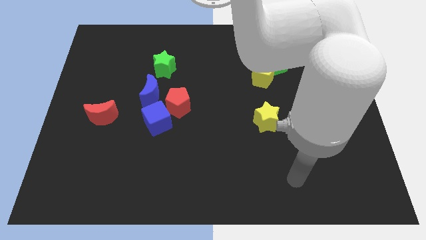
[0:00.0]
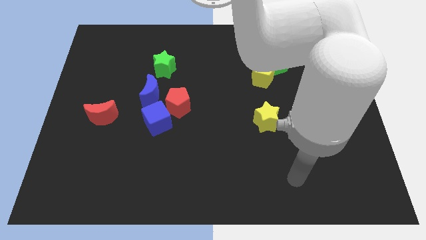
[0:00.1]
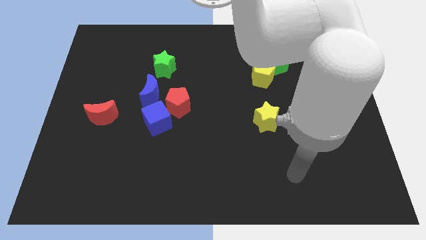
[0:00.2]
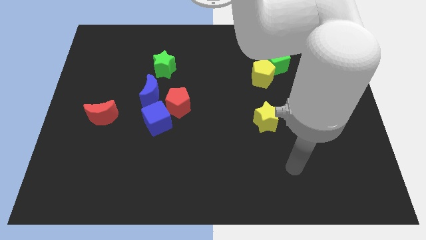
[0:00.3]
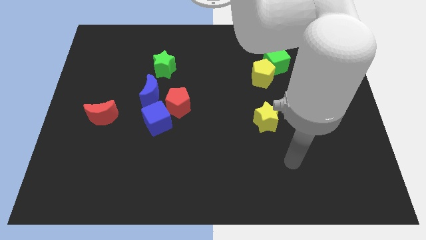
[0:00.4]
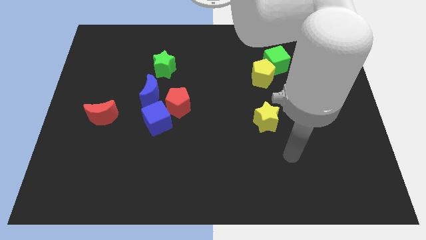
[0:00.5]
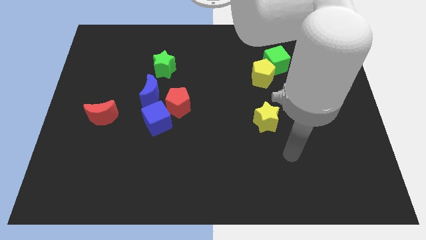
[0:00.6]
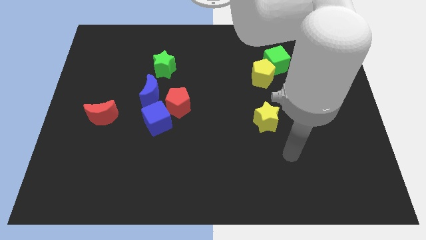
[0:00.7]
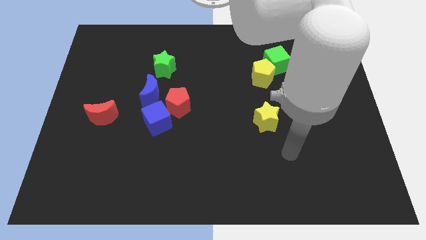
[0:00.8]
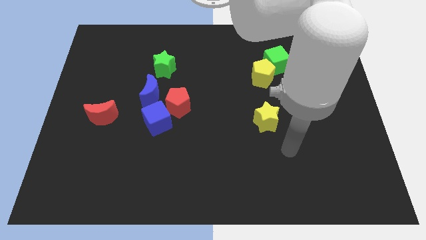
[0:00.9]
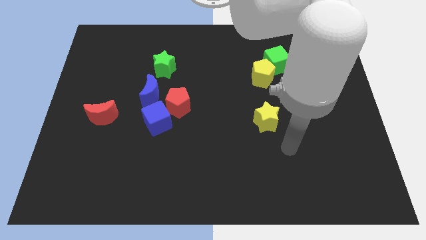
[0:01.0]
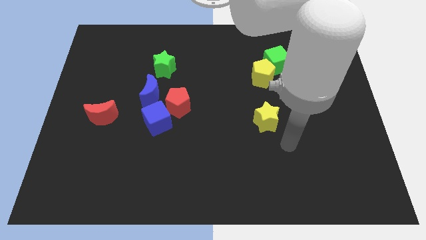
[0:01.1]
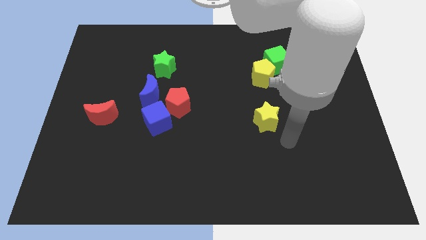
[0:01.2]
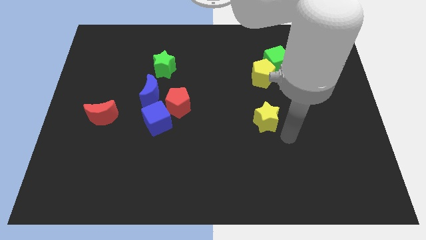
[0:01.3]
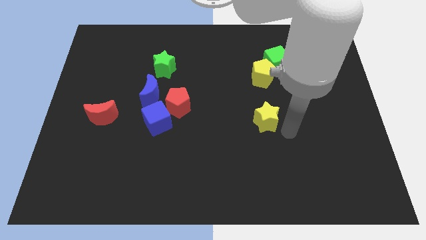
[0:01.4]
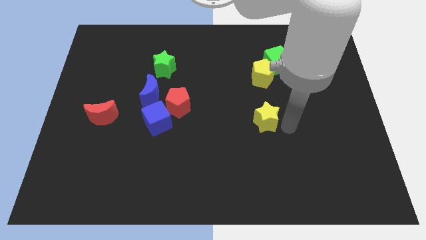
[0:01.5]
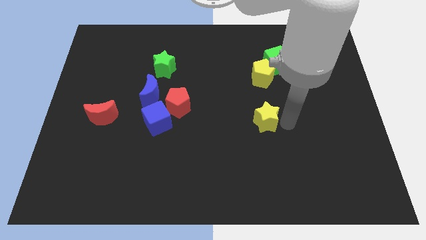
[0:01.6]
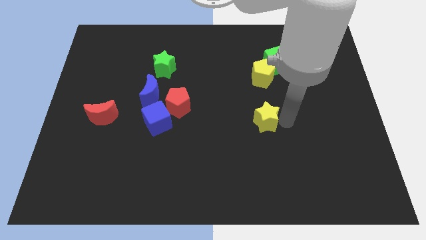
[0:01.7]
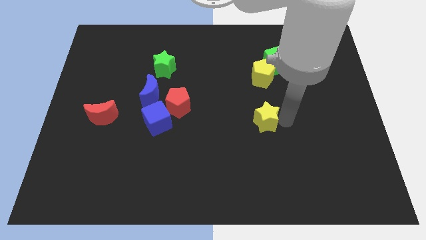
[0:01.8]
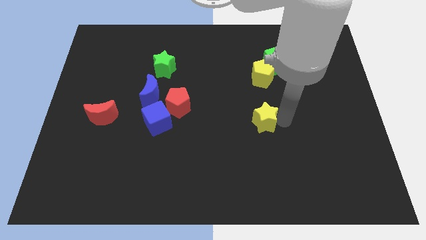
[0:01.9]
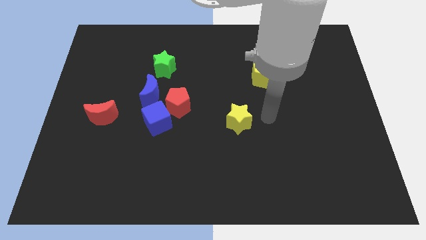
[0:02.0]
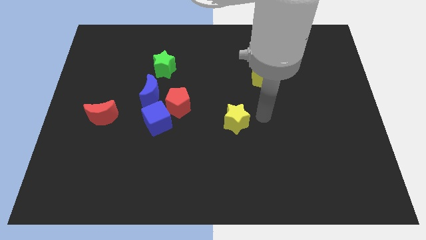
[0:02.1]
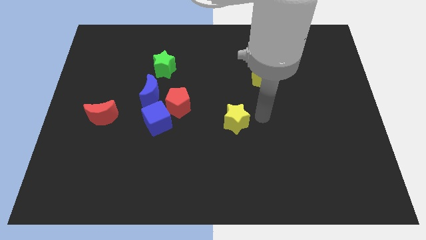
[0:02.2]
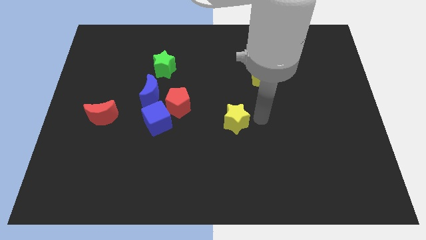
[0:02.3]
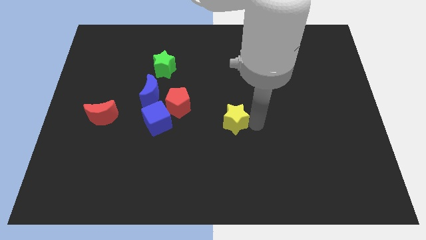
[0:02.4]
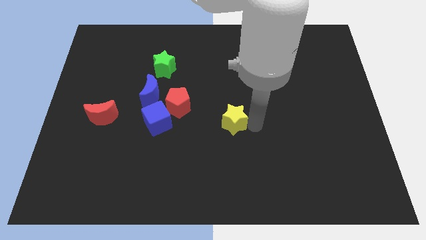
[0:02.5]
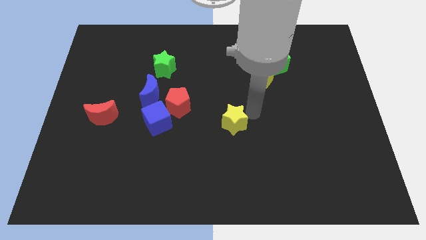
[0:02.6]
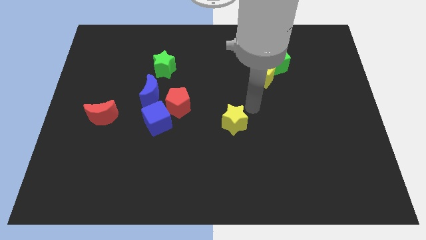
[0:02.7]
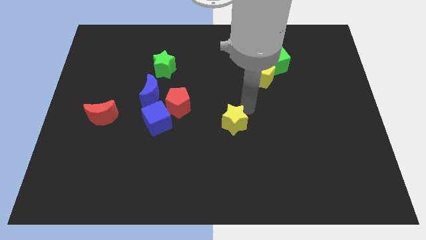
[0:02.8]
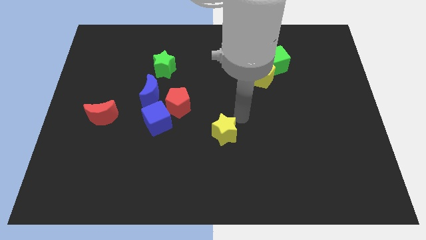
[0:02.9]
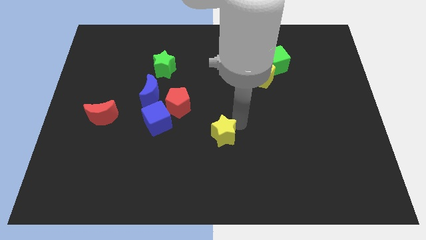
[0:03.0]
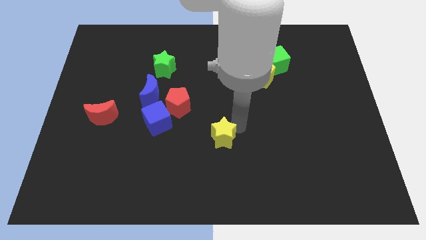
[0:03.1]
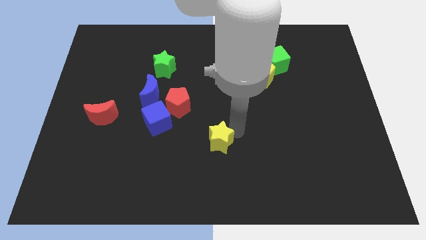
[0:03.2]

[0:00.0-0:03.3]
move the yellow star diagonally to the bottom left of the yellow pentagon

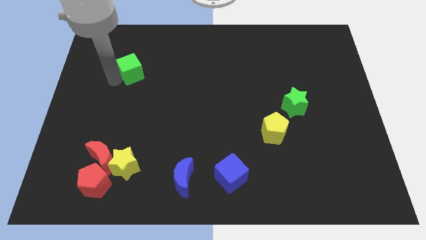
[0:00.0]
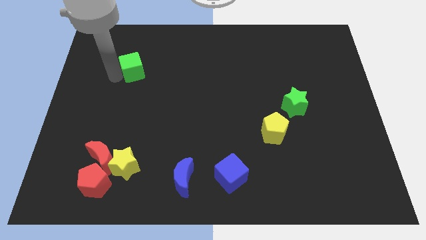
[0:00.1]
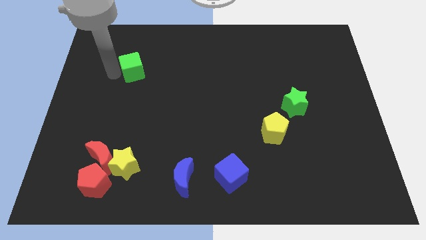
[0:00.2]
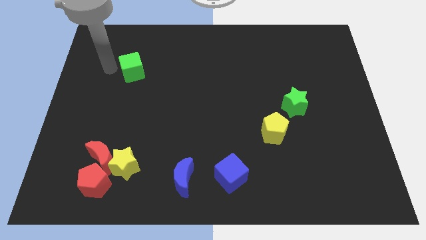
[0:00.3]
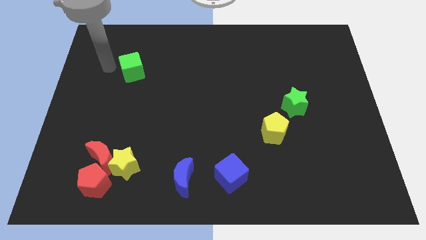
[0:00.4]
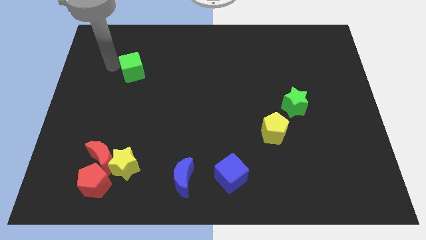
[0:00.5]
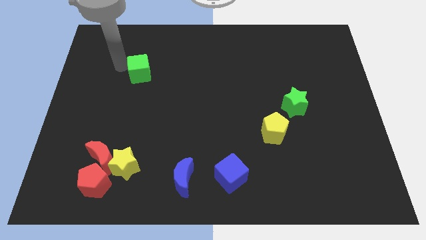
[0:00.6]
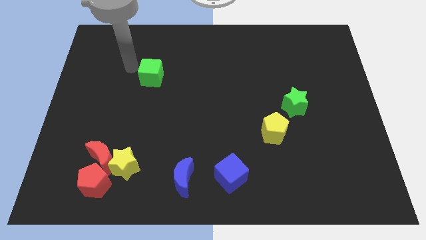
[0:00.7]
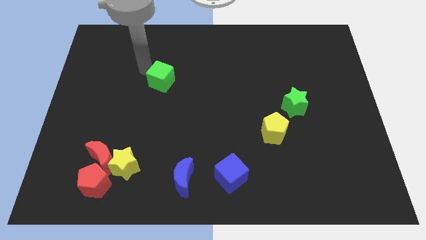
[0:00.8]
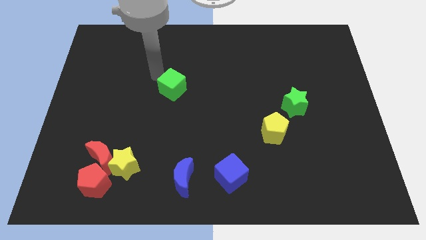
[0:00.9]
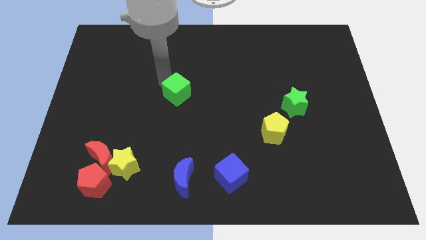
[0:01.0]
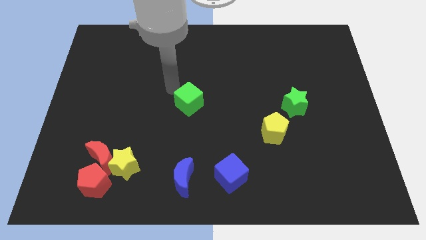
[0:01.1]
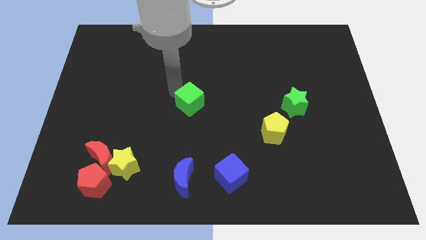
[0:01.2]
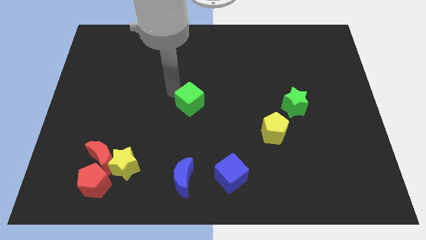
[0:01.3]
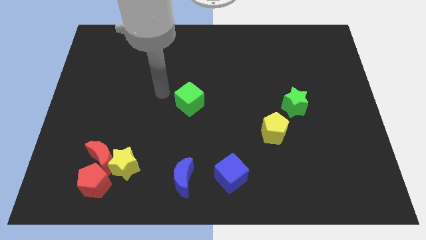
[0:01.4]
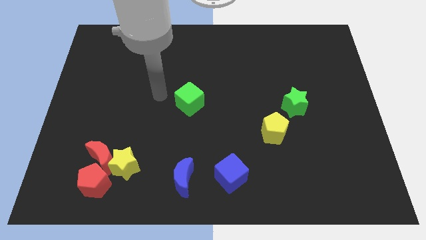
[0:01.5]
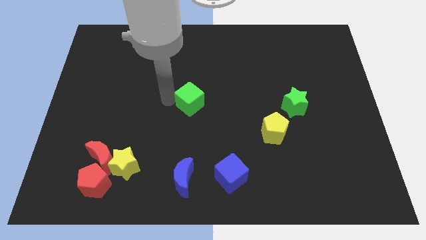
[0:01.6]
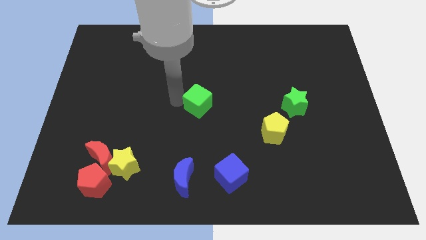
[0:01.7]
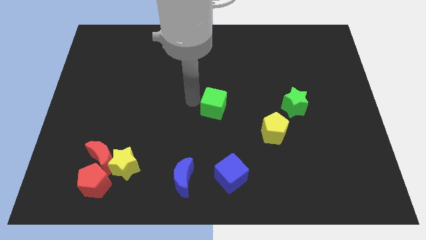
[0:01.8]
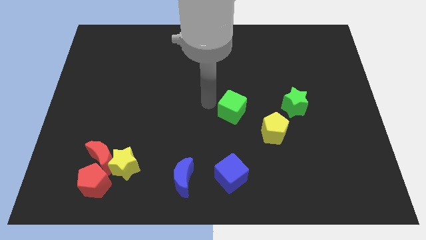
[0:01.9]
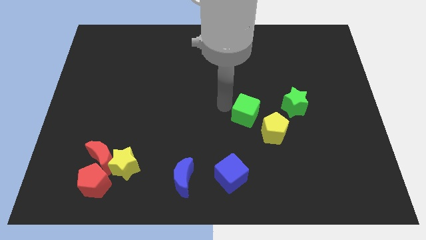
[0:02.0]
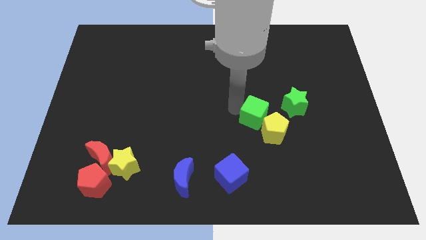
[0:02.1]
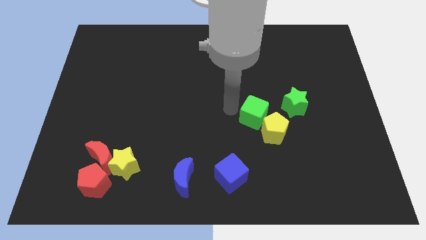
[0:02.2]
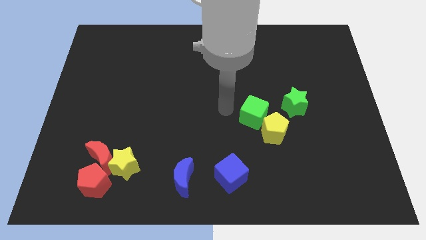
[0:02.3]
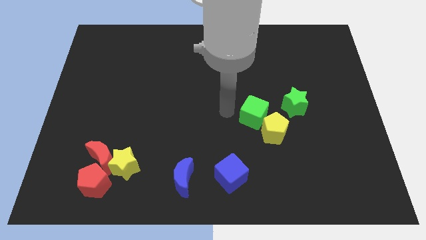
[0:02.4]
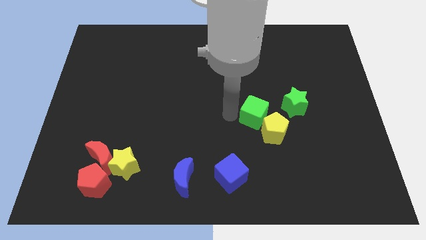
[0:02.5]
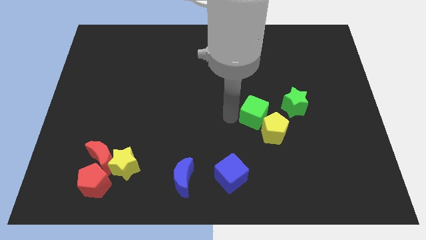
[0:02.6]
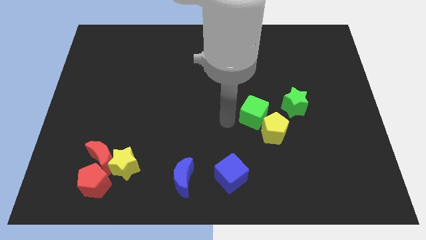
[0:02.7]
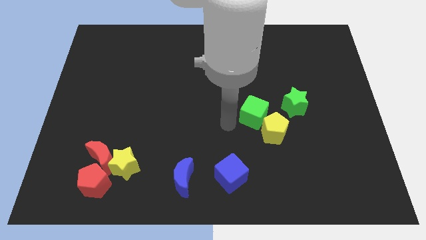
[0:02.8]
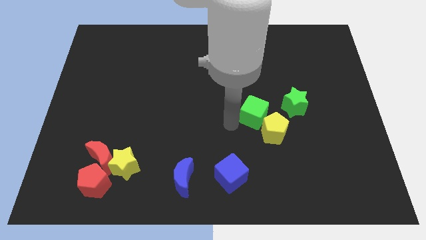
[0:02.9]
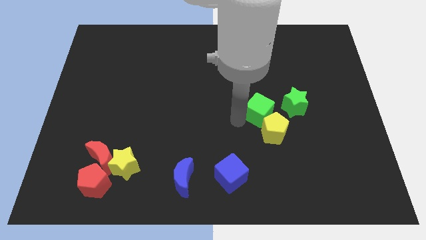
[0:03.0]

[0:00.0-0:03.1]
move green cube close to the yellow pentagon

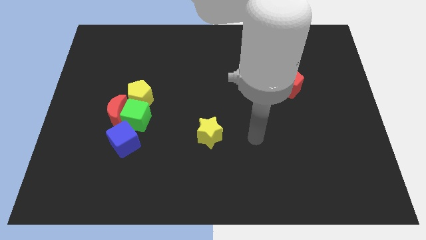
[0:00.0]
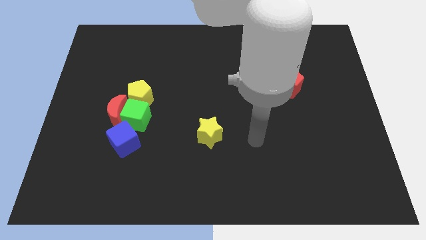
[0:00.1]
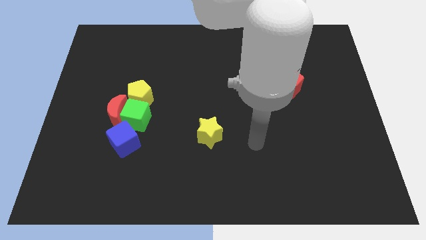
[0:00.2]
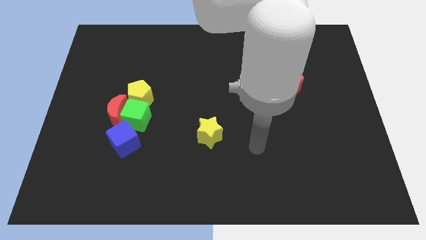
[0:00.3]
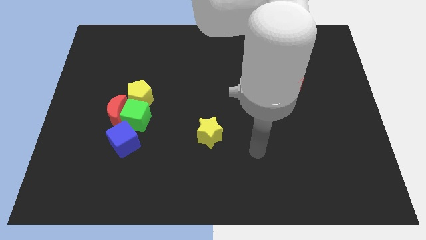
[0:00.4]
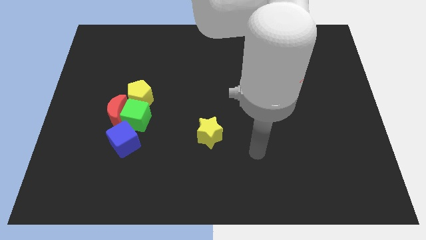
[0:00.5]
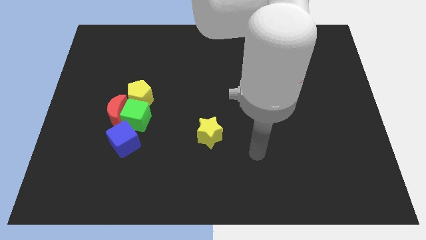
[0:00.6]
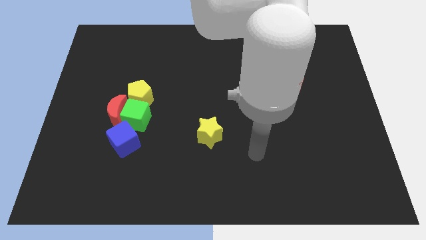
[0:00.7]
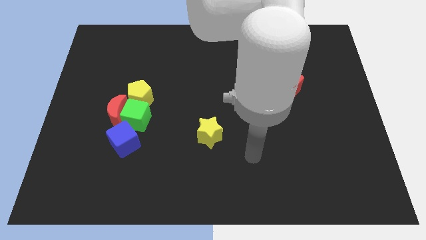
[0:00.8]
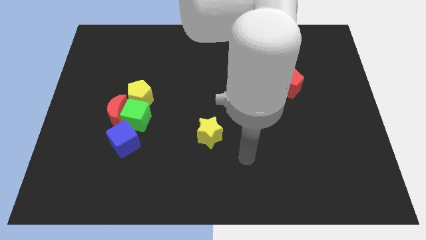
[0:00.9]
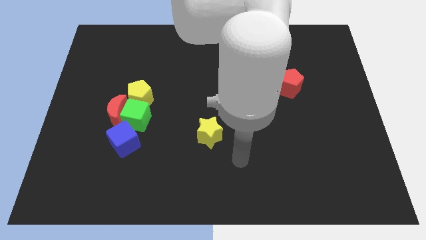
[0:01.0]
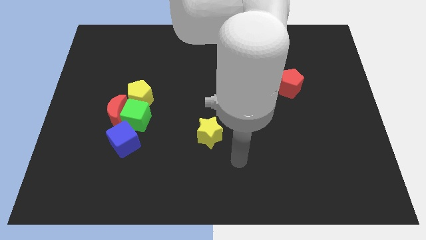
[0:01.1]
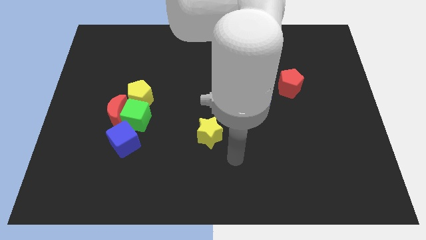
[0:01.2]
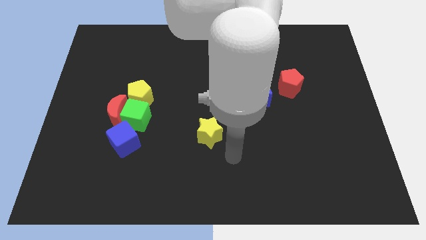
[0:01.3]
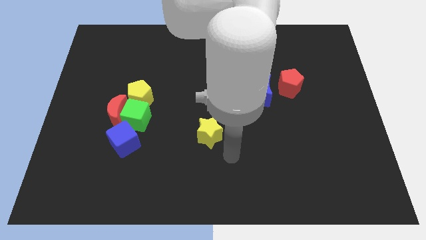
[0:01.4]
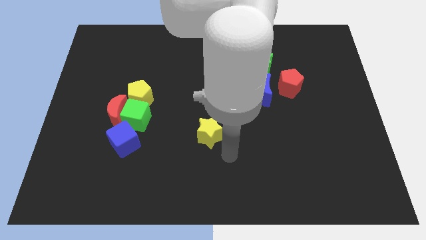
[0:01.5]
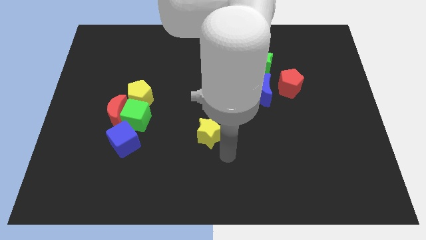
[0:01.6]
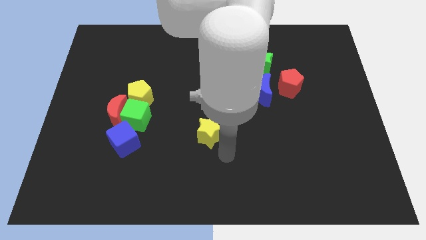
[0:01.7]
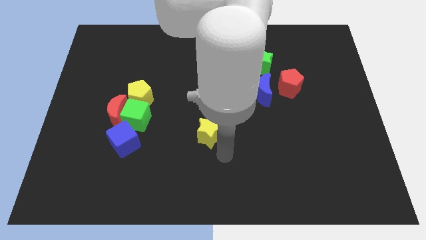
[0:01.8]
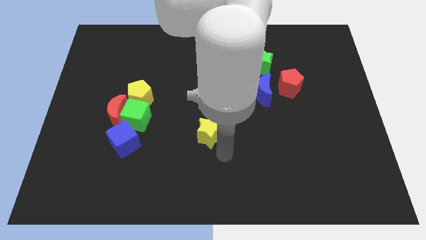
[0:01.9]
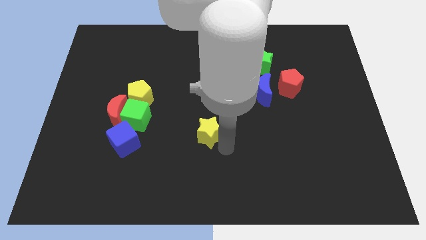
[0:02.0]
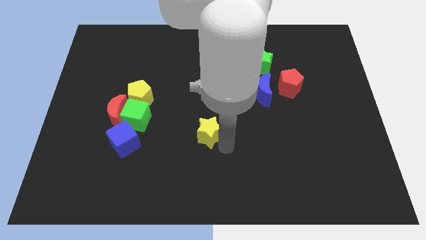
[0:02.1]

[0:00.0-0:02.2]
place your arm to the bottom of yellow star

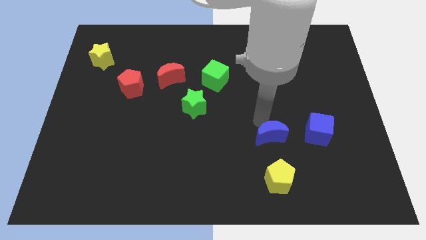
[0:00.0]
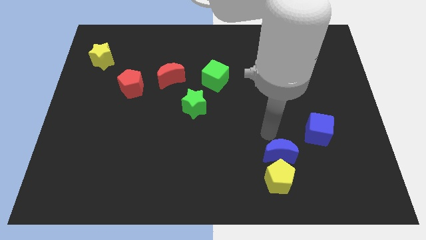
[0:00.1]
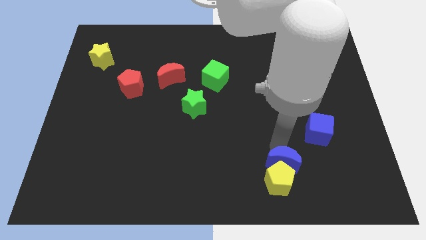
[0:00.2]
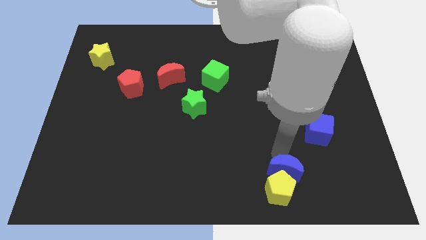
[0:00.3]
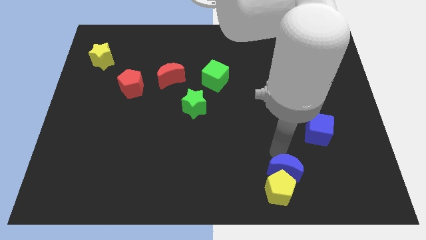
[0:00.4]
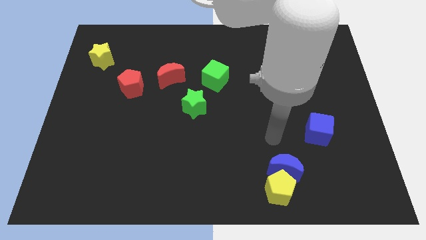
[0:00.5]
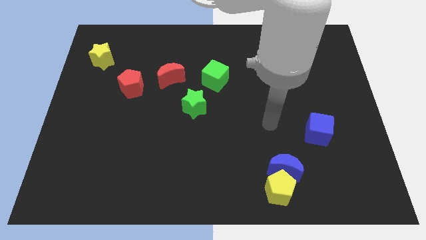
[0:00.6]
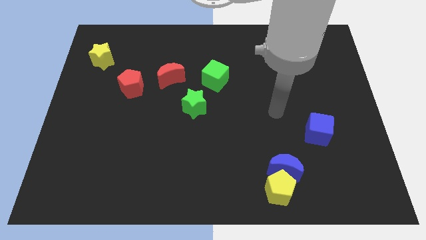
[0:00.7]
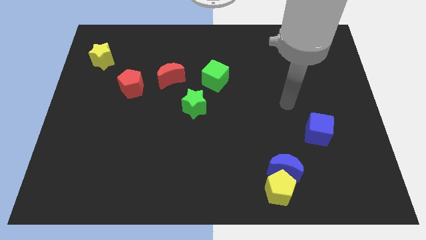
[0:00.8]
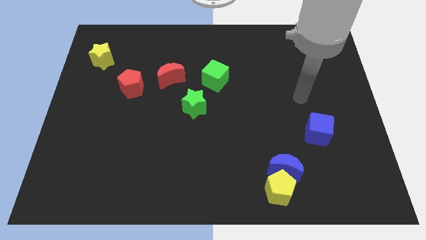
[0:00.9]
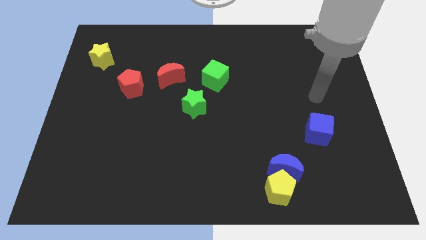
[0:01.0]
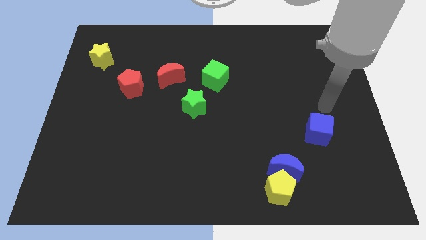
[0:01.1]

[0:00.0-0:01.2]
push the blue crescent into the yellow pentagon
